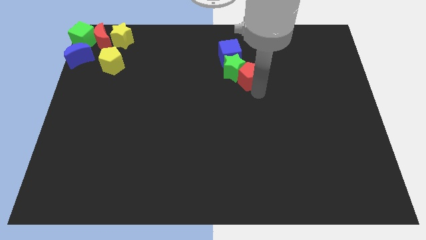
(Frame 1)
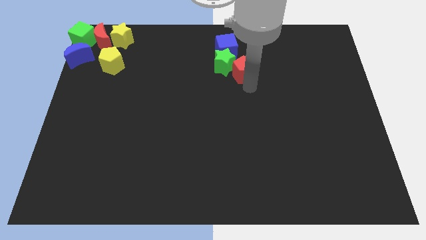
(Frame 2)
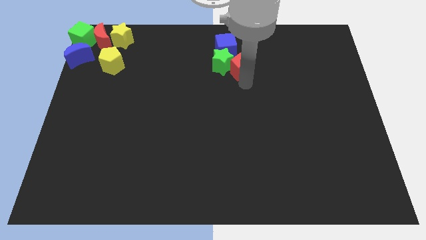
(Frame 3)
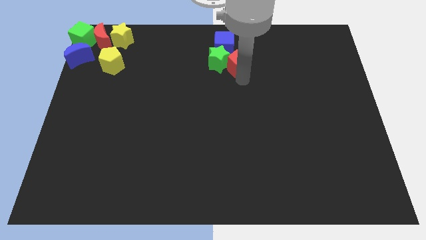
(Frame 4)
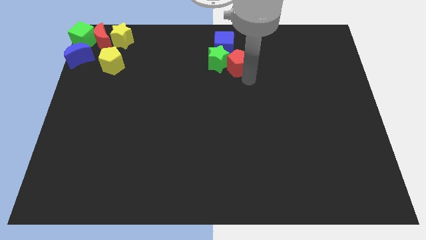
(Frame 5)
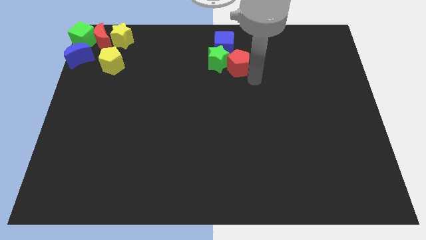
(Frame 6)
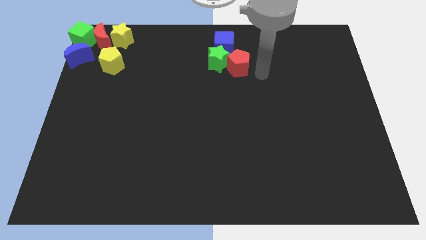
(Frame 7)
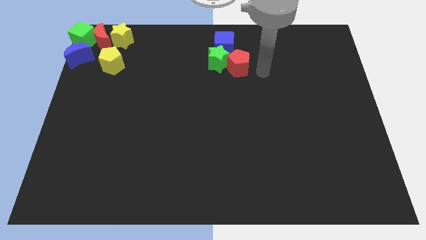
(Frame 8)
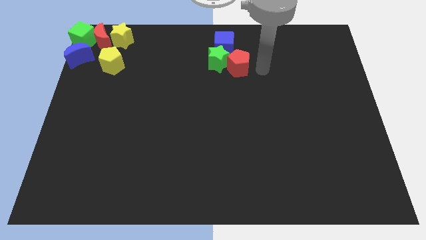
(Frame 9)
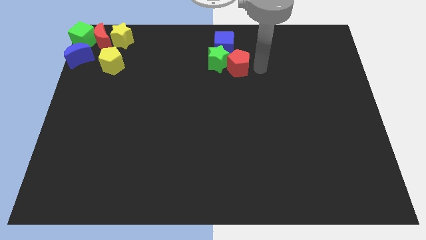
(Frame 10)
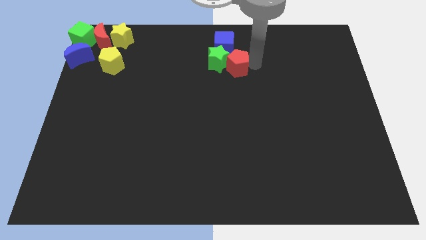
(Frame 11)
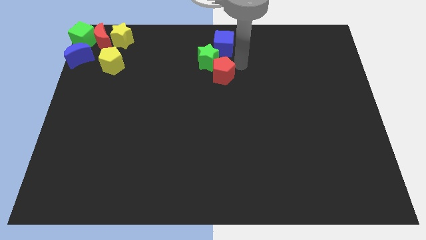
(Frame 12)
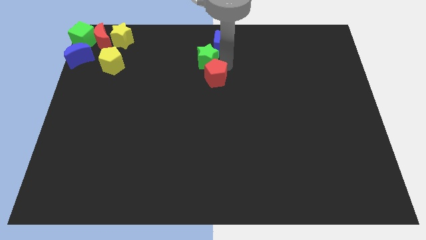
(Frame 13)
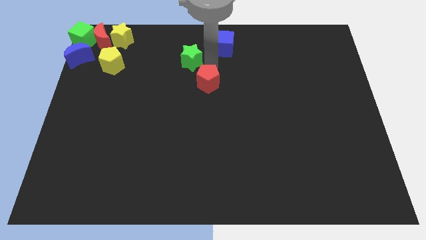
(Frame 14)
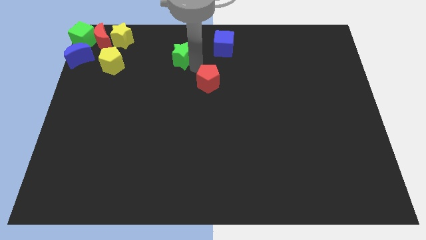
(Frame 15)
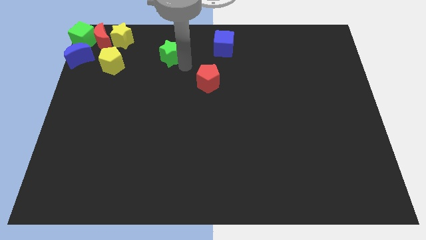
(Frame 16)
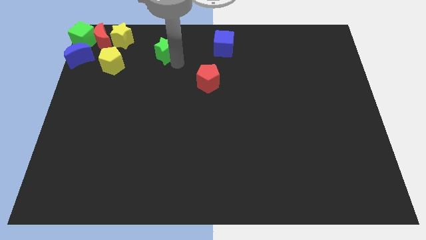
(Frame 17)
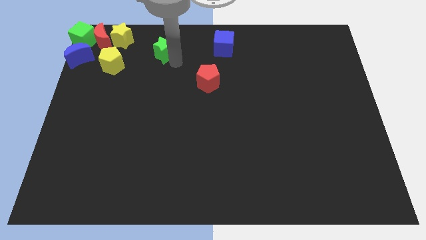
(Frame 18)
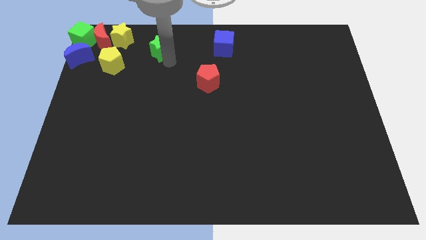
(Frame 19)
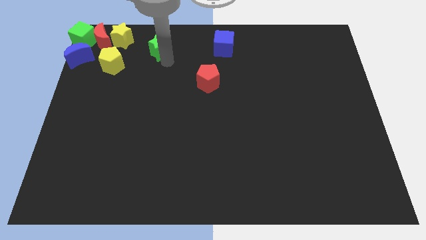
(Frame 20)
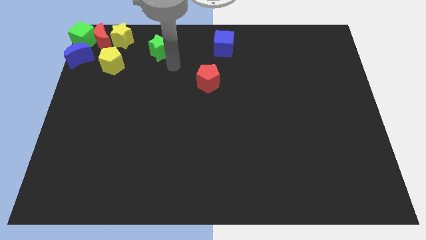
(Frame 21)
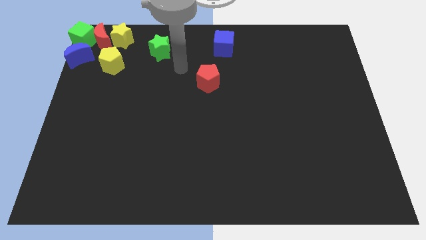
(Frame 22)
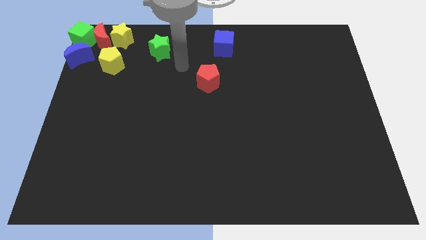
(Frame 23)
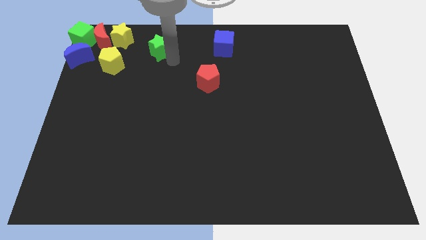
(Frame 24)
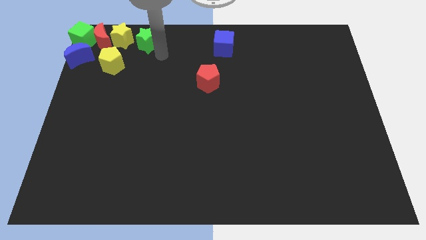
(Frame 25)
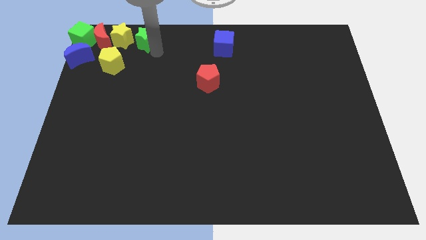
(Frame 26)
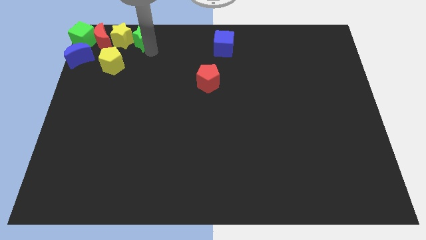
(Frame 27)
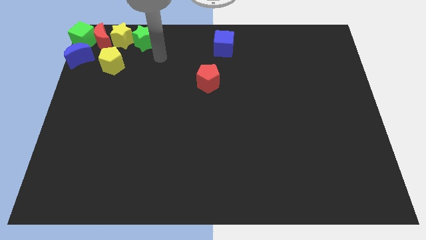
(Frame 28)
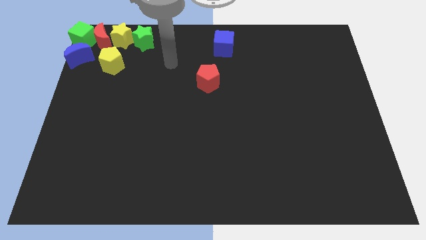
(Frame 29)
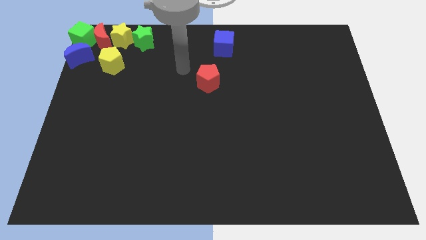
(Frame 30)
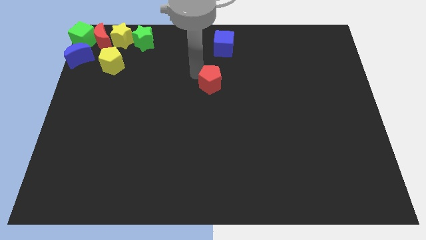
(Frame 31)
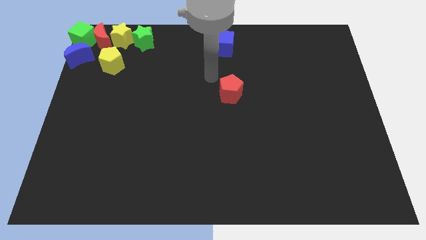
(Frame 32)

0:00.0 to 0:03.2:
separate the green star and red pentagon from the group of blocks

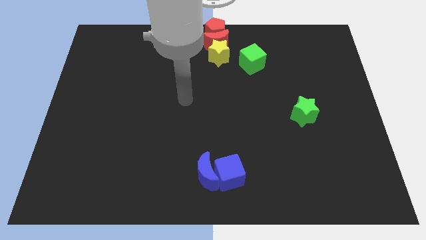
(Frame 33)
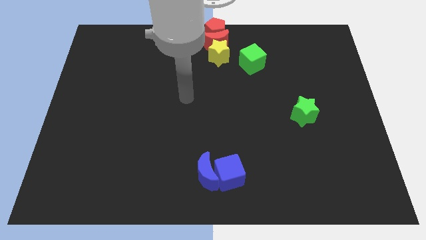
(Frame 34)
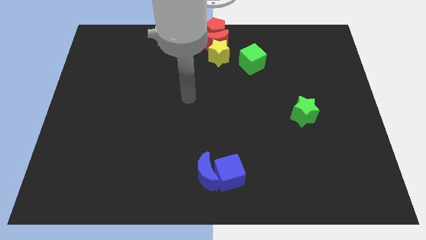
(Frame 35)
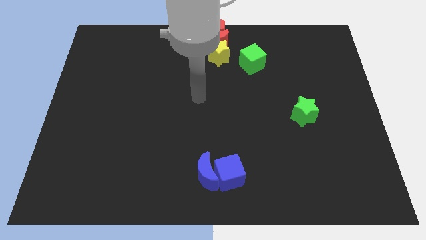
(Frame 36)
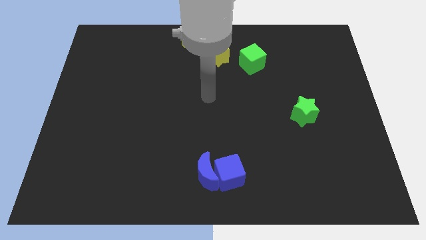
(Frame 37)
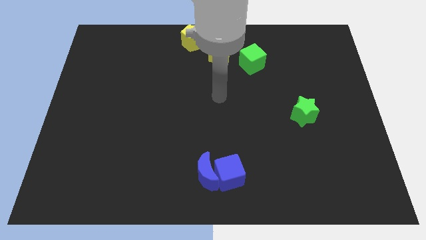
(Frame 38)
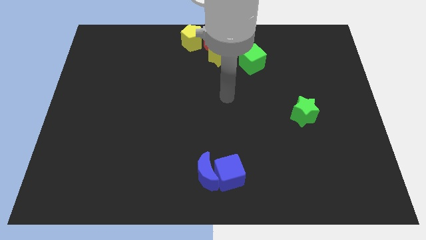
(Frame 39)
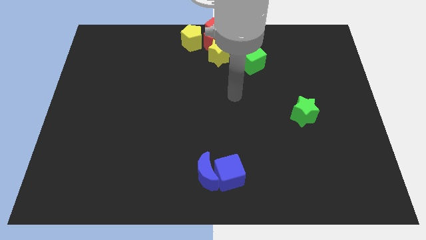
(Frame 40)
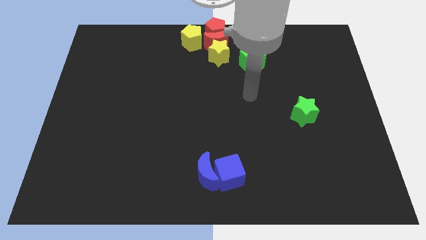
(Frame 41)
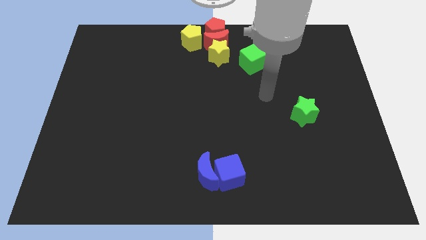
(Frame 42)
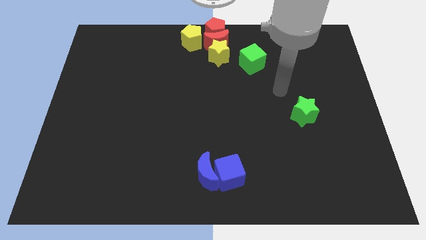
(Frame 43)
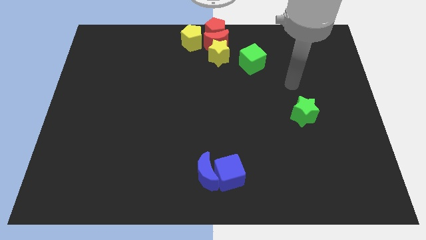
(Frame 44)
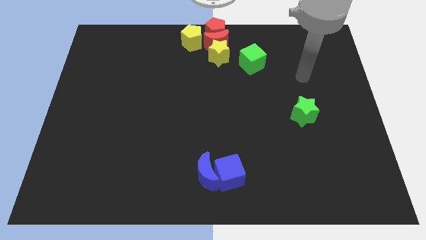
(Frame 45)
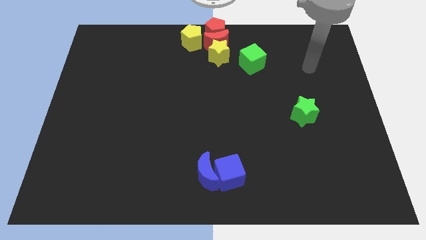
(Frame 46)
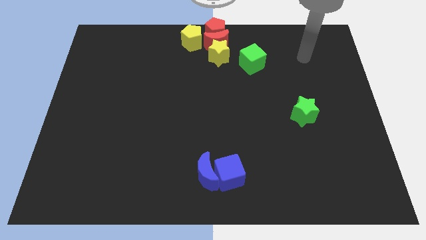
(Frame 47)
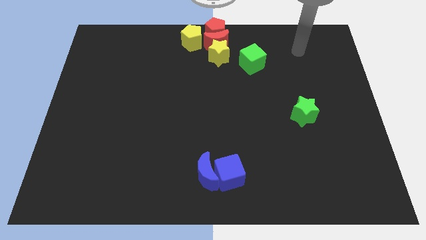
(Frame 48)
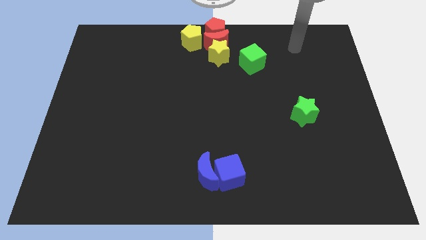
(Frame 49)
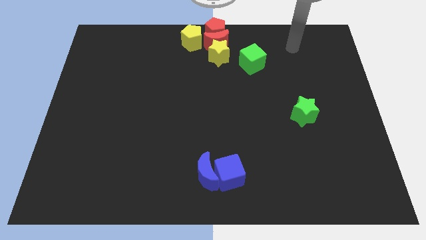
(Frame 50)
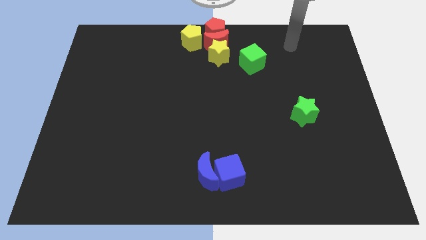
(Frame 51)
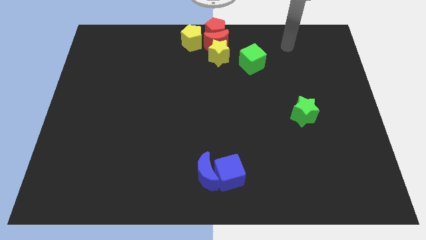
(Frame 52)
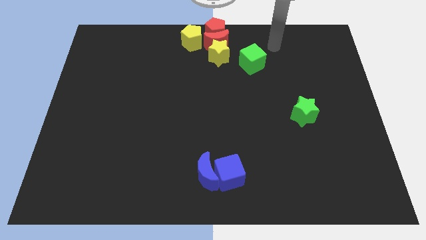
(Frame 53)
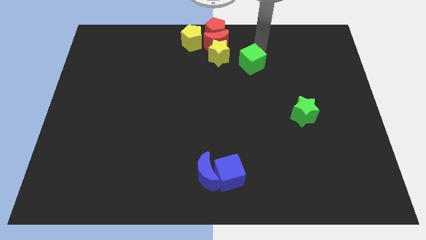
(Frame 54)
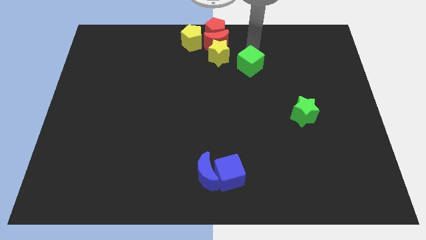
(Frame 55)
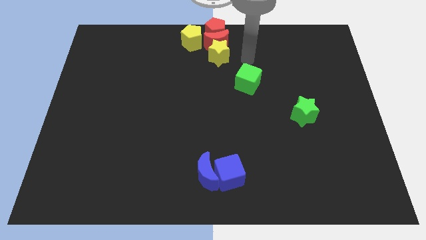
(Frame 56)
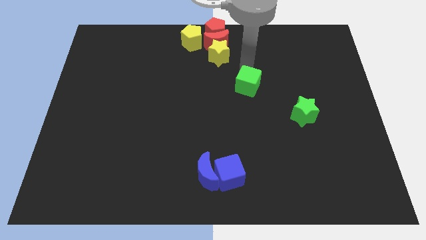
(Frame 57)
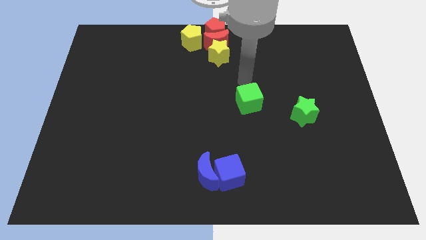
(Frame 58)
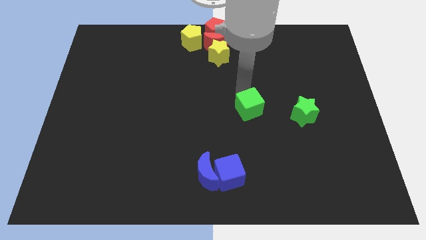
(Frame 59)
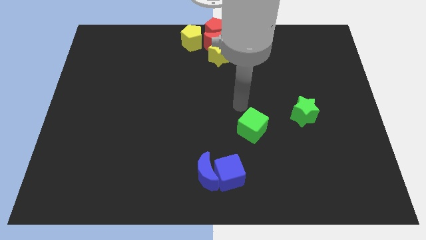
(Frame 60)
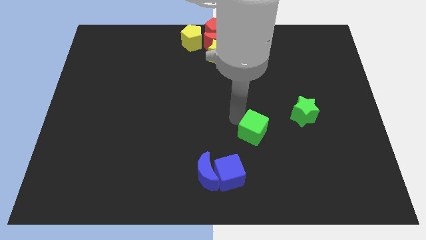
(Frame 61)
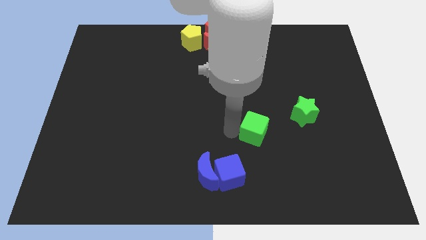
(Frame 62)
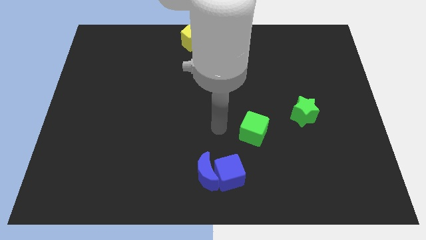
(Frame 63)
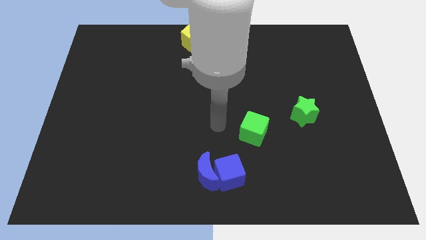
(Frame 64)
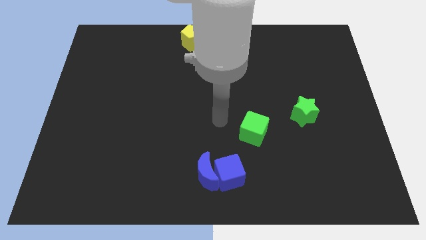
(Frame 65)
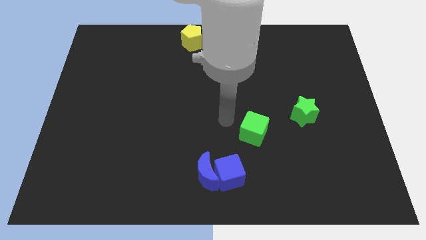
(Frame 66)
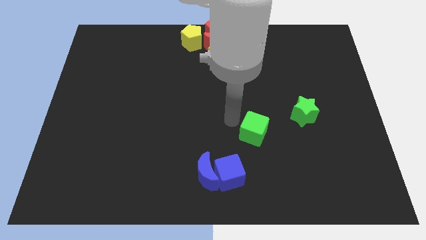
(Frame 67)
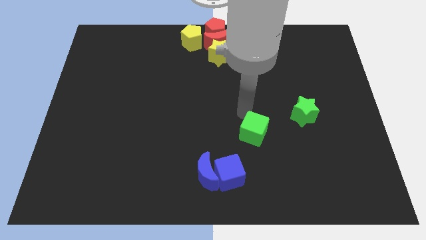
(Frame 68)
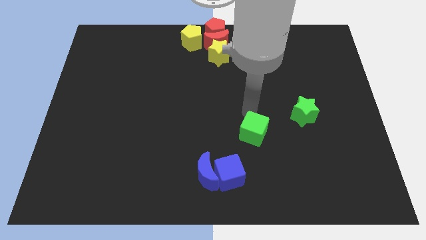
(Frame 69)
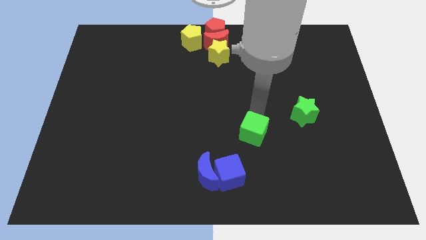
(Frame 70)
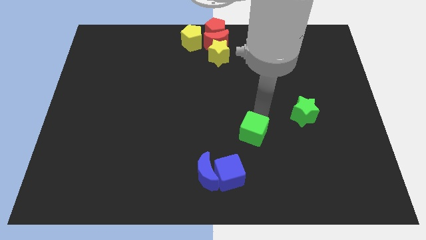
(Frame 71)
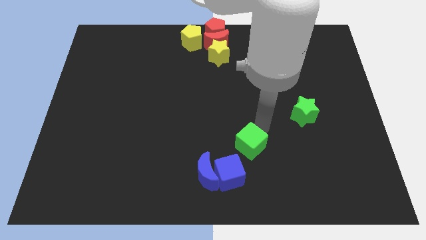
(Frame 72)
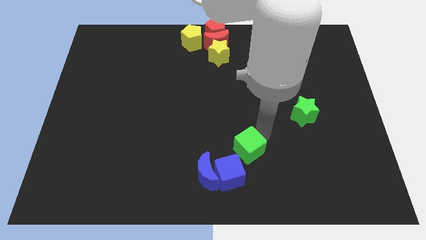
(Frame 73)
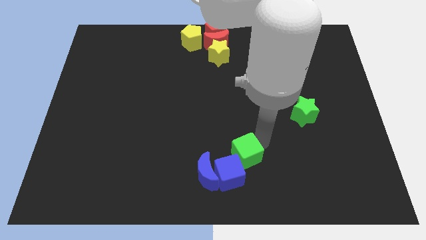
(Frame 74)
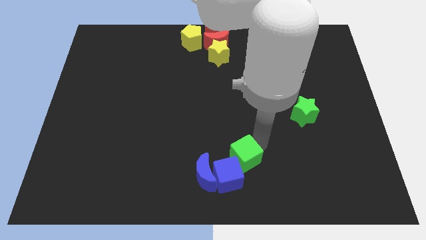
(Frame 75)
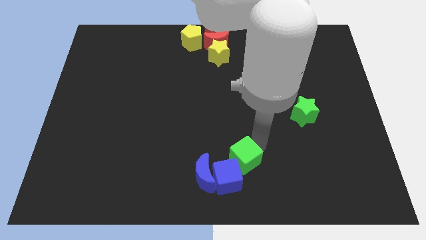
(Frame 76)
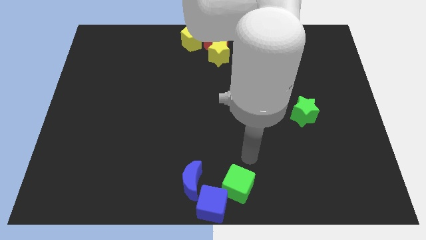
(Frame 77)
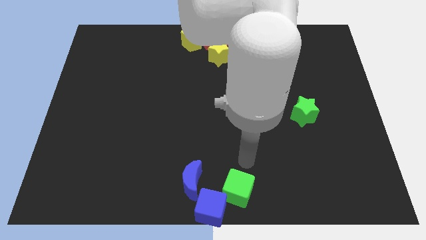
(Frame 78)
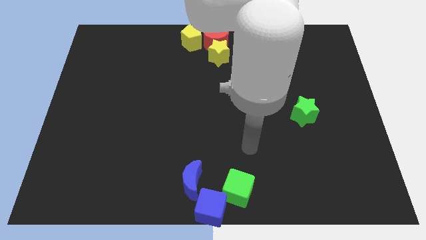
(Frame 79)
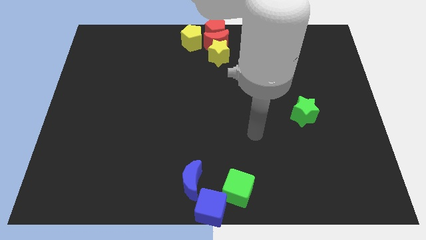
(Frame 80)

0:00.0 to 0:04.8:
push the green cube into the blue cube towards the bottom center of the board

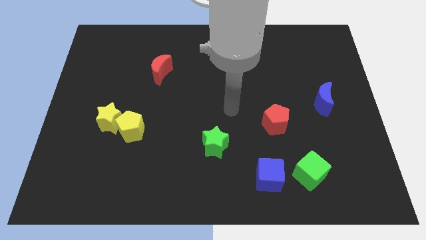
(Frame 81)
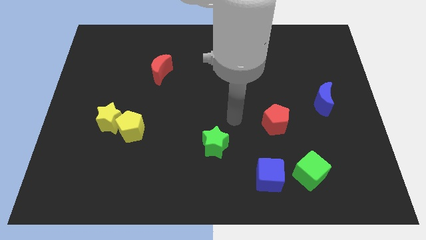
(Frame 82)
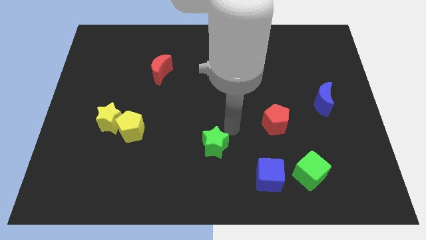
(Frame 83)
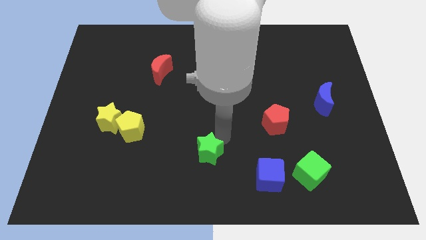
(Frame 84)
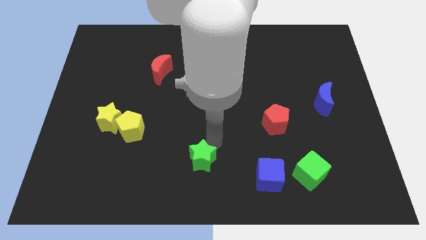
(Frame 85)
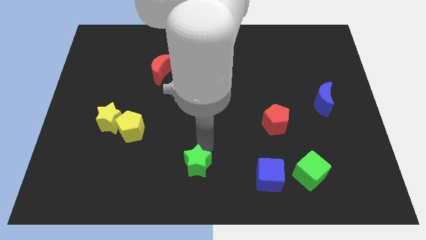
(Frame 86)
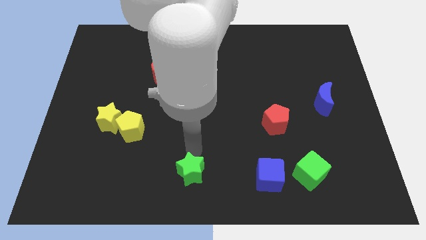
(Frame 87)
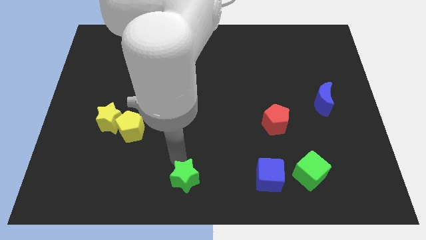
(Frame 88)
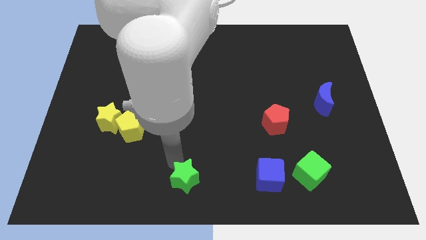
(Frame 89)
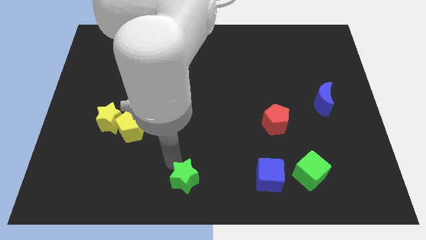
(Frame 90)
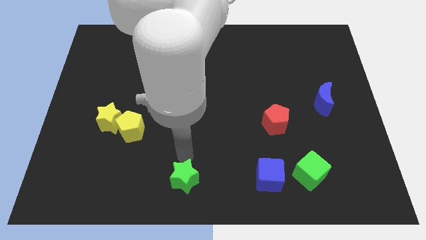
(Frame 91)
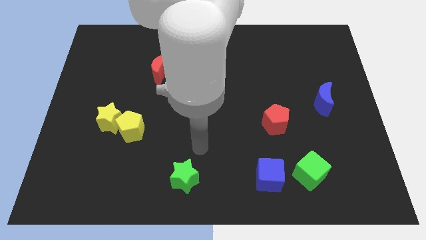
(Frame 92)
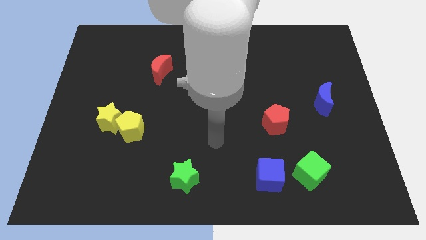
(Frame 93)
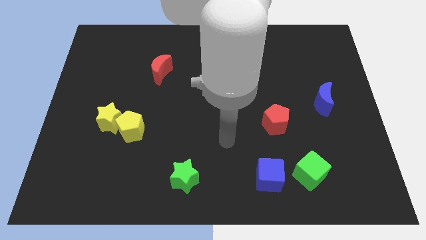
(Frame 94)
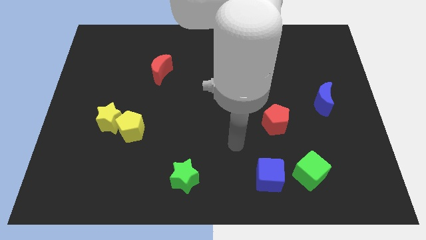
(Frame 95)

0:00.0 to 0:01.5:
move the green star to the bottom center
